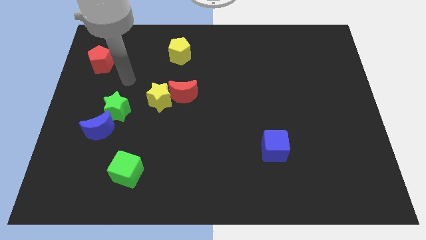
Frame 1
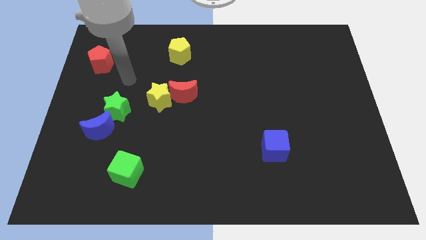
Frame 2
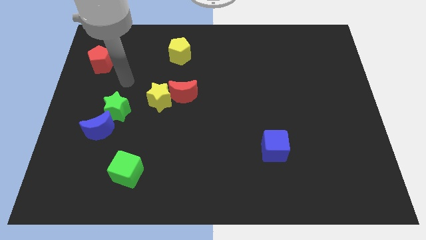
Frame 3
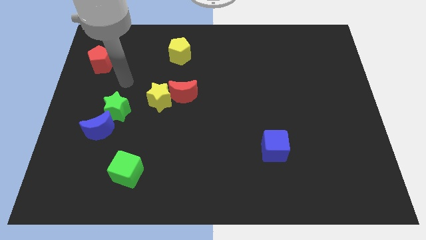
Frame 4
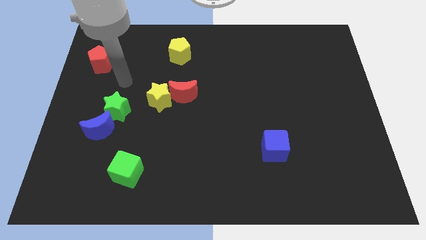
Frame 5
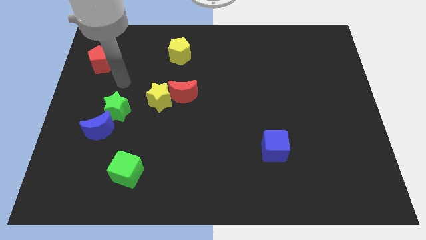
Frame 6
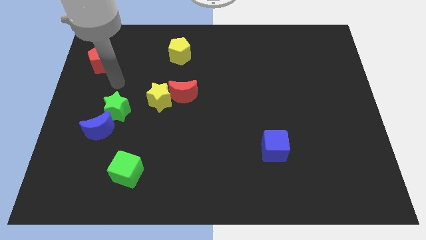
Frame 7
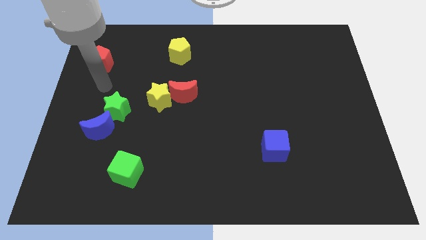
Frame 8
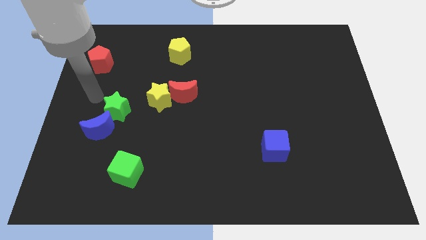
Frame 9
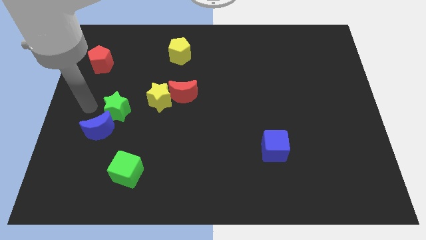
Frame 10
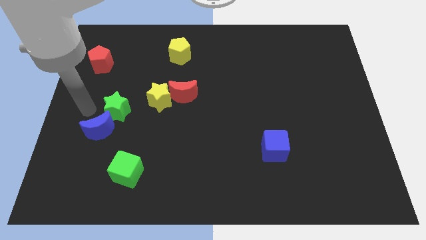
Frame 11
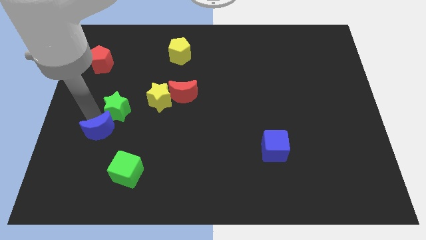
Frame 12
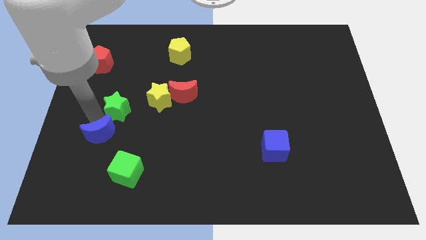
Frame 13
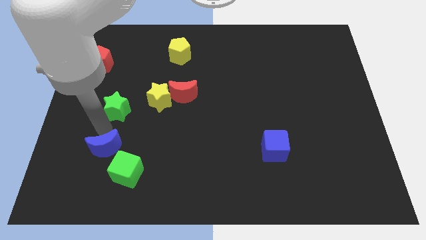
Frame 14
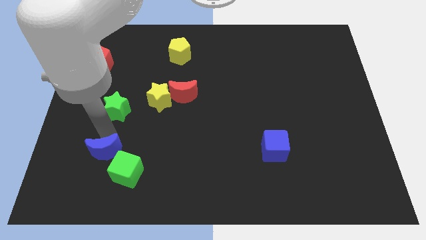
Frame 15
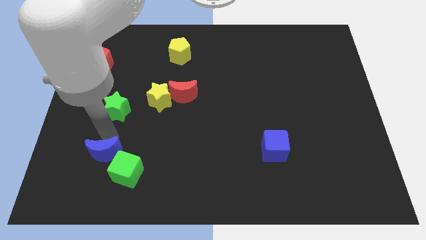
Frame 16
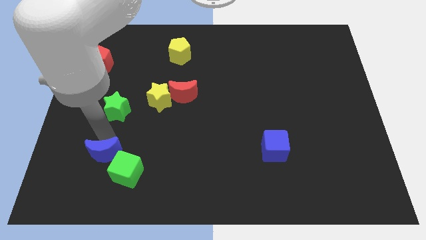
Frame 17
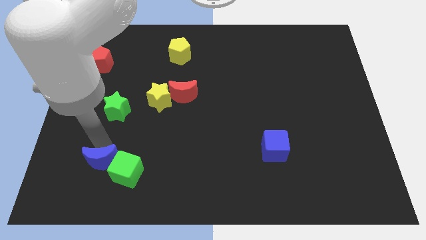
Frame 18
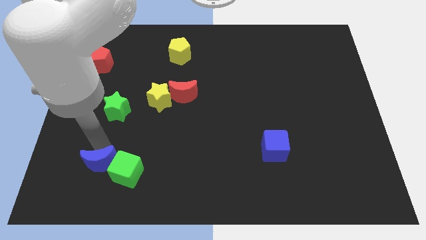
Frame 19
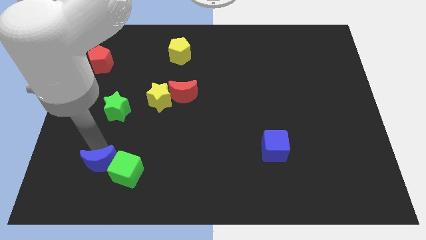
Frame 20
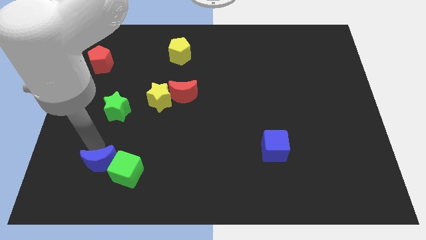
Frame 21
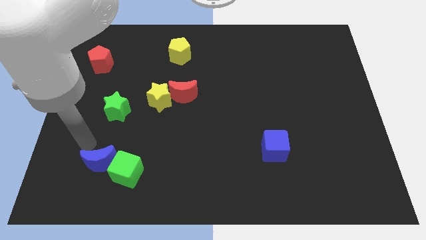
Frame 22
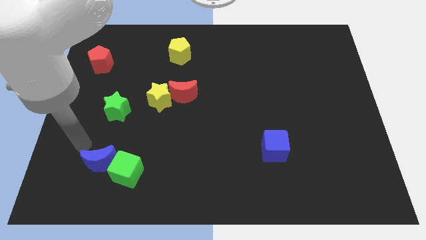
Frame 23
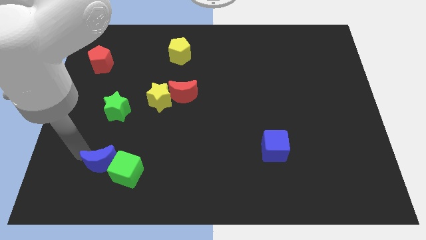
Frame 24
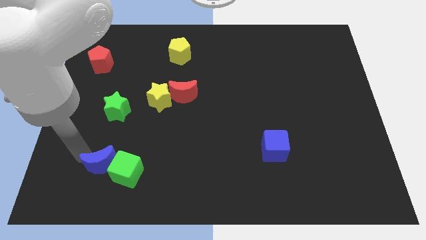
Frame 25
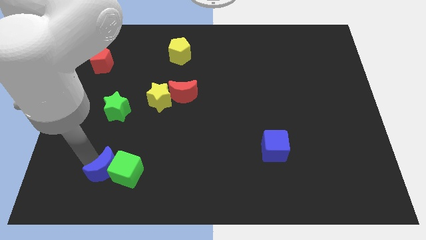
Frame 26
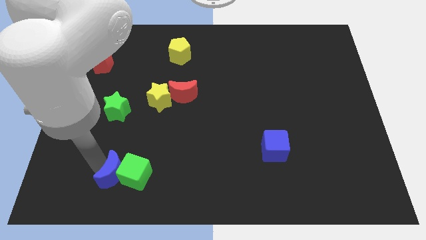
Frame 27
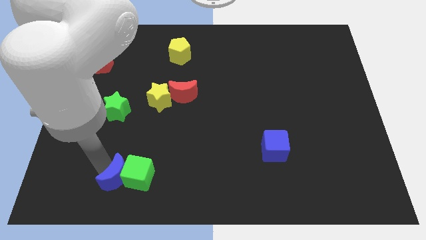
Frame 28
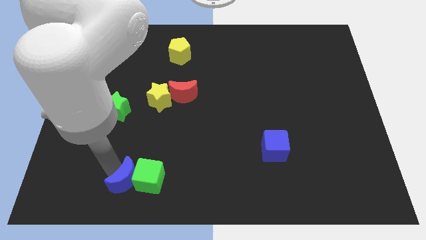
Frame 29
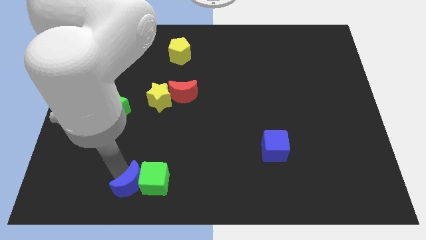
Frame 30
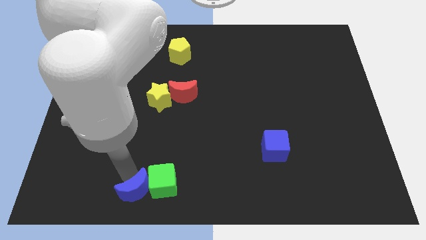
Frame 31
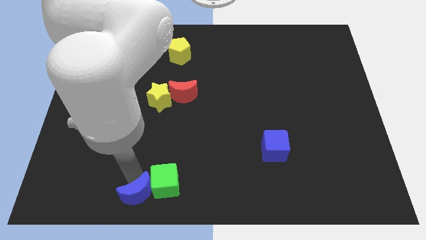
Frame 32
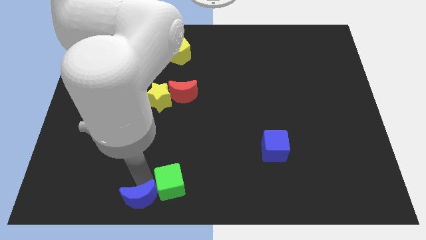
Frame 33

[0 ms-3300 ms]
push the blue moon into the green cube

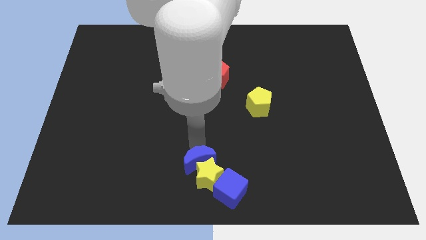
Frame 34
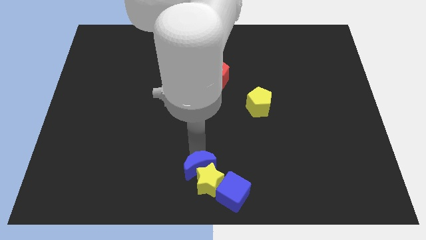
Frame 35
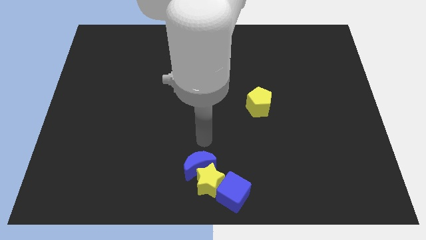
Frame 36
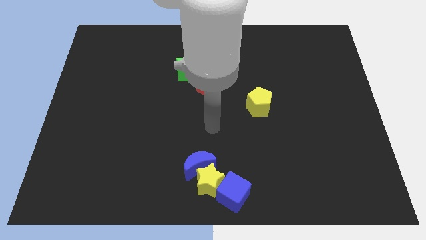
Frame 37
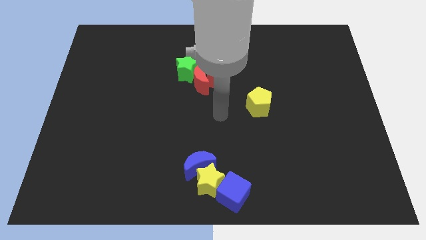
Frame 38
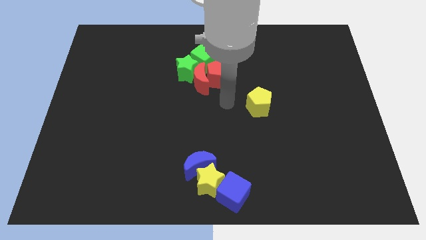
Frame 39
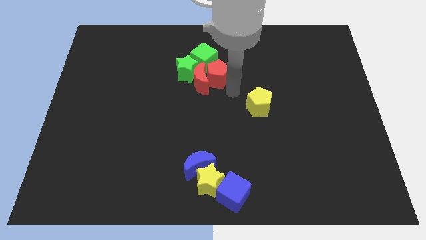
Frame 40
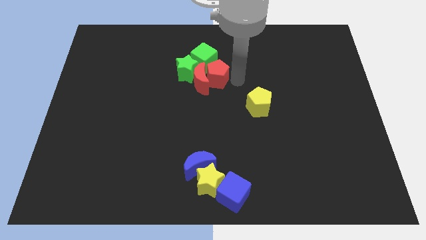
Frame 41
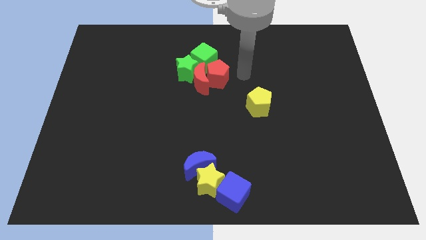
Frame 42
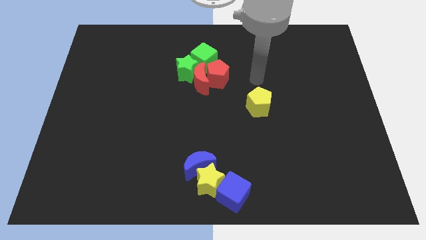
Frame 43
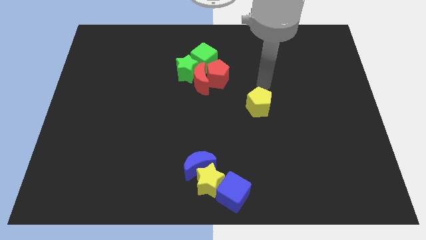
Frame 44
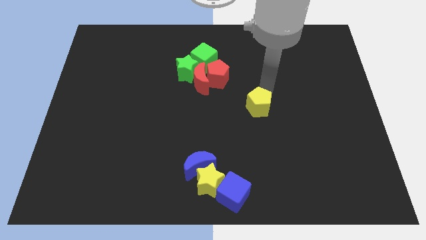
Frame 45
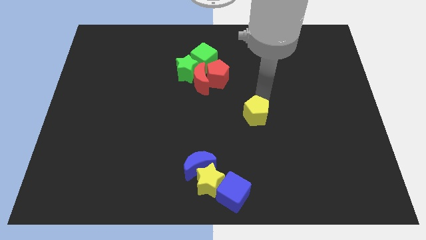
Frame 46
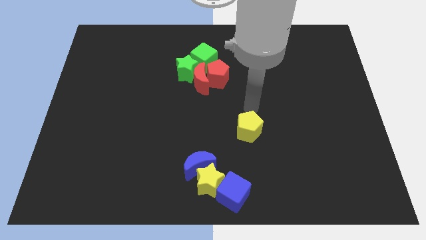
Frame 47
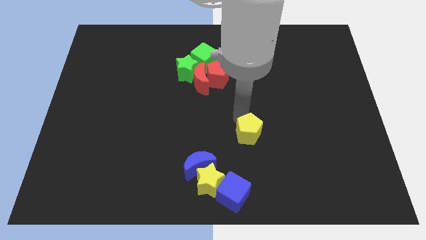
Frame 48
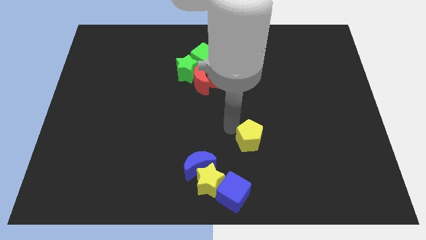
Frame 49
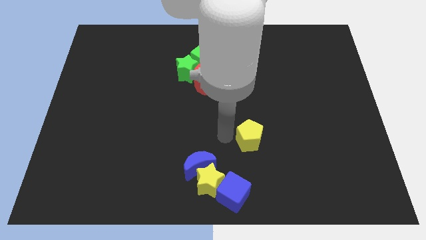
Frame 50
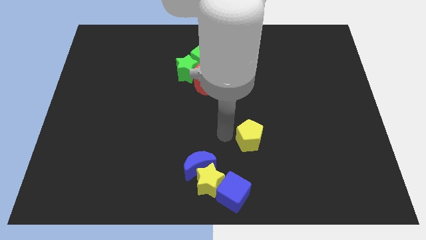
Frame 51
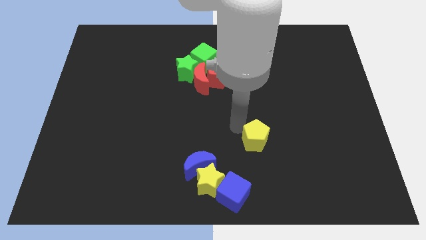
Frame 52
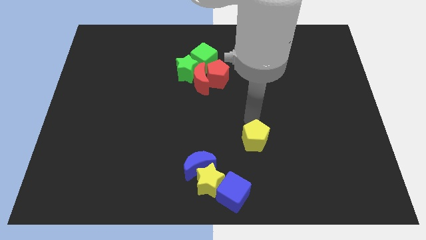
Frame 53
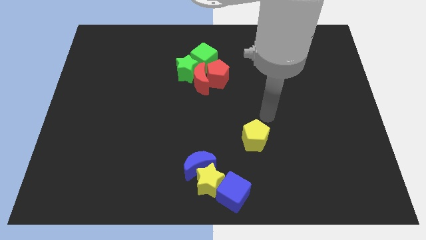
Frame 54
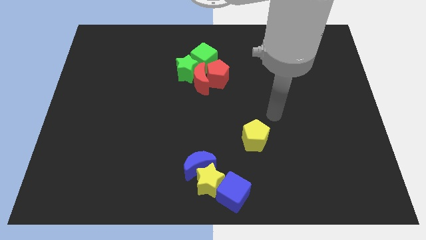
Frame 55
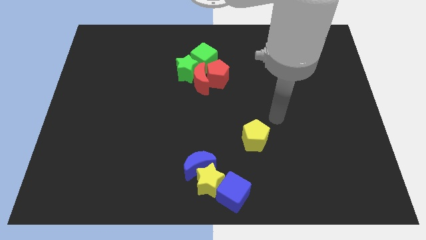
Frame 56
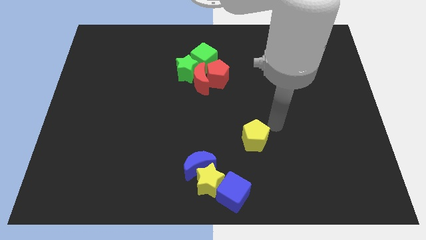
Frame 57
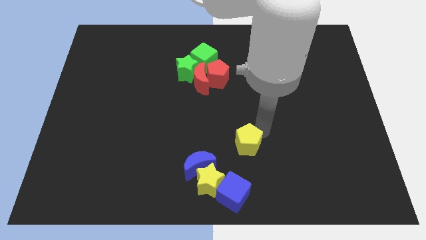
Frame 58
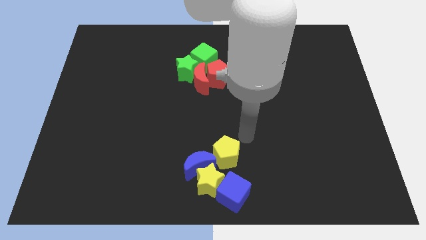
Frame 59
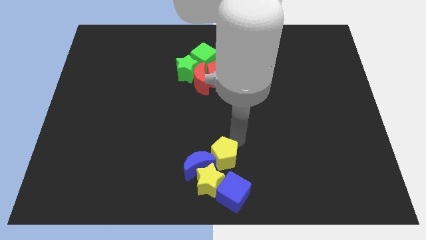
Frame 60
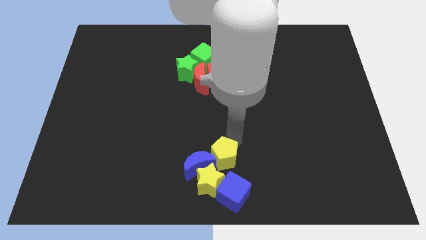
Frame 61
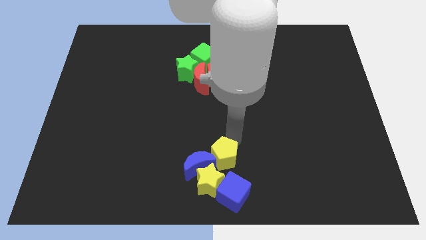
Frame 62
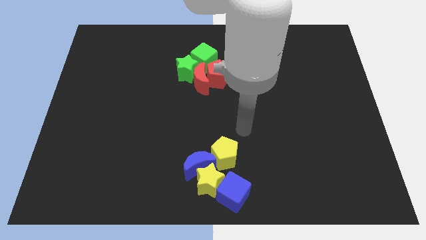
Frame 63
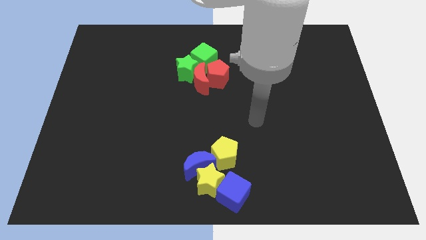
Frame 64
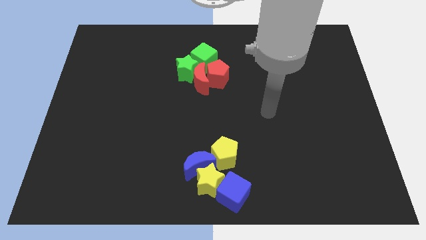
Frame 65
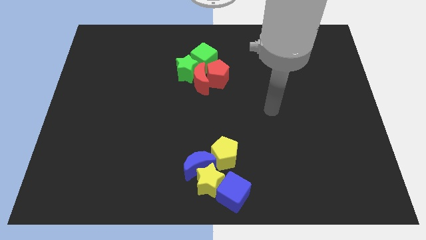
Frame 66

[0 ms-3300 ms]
move the yellow pentagon into the blue crescent

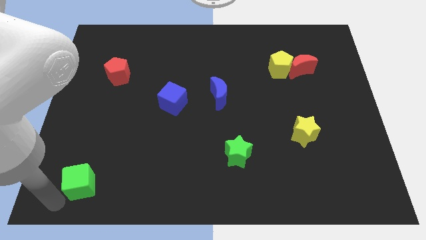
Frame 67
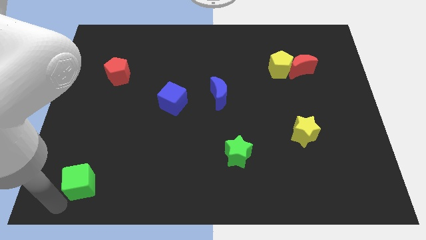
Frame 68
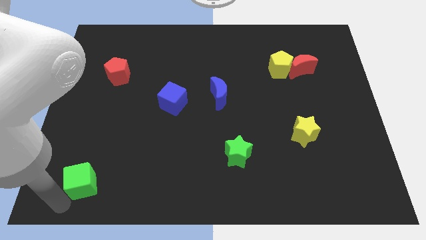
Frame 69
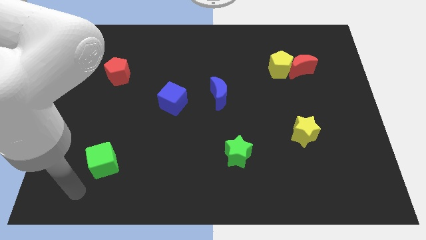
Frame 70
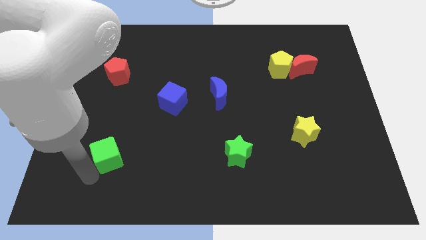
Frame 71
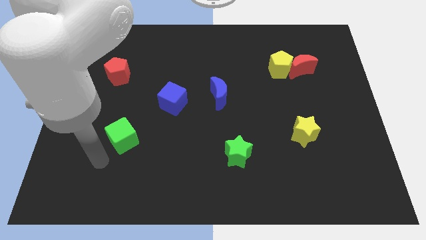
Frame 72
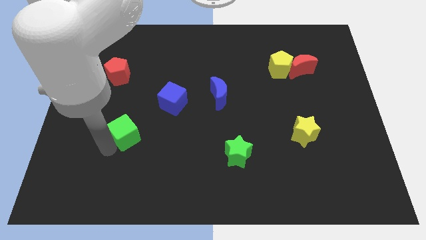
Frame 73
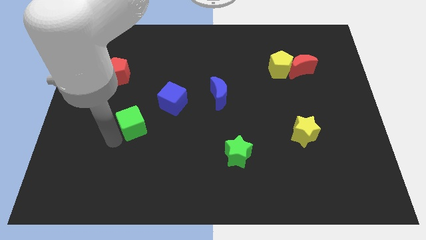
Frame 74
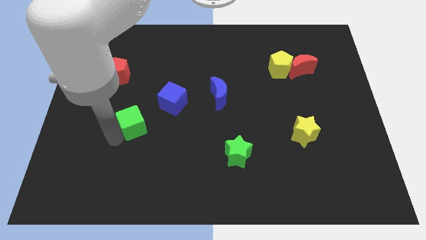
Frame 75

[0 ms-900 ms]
push green cube diagonally towards blue cube

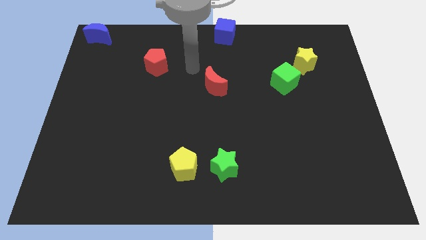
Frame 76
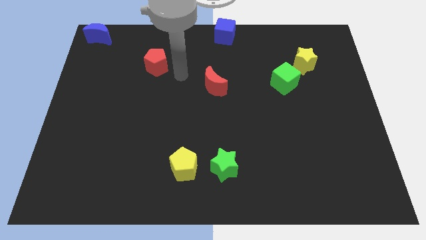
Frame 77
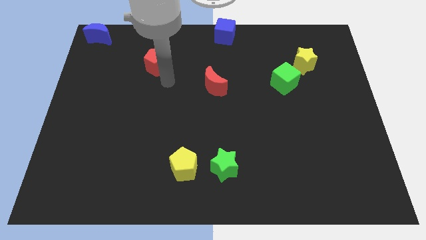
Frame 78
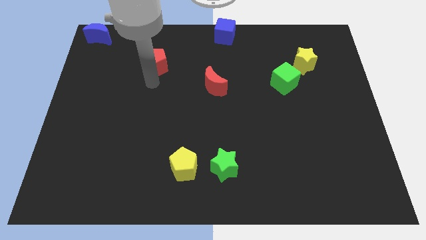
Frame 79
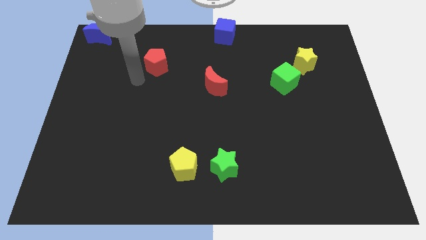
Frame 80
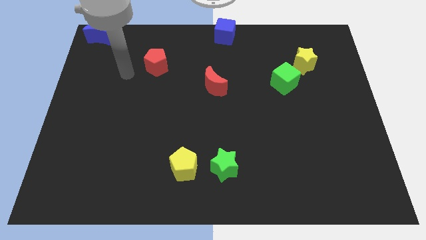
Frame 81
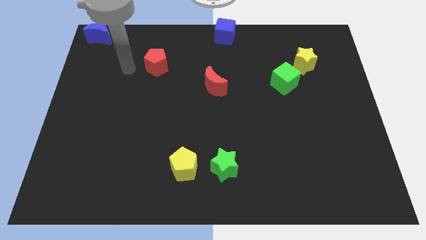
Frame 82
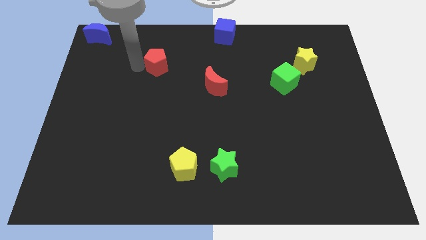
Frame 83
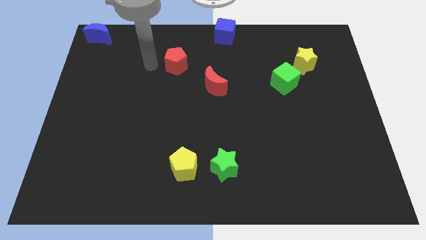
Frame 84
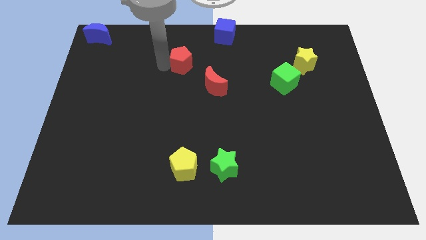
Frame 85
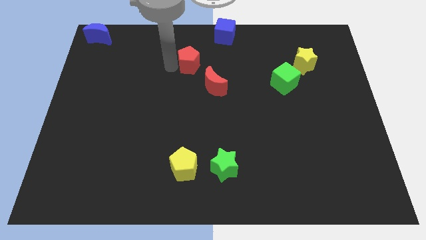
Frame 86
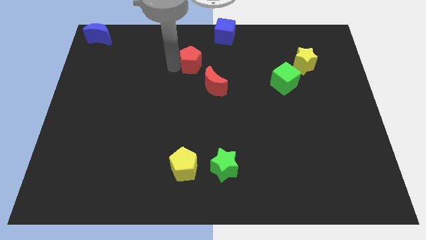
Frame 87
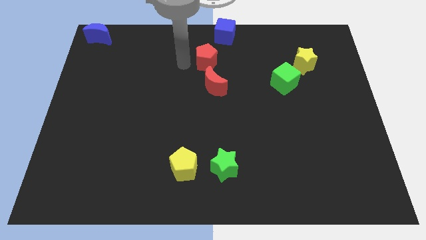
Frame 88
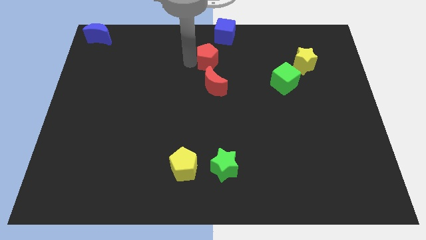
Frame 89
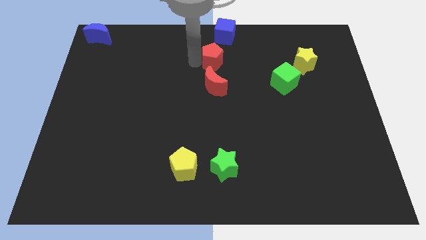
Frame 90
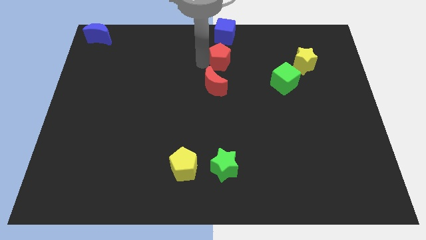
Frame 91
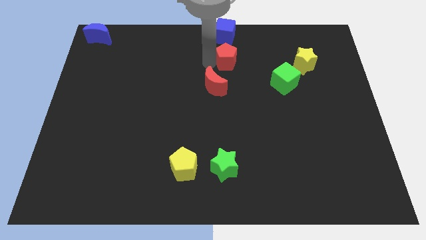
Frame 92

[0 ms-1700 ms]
push the red pentagon in between the blue cube and red moon
